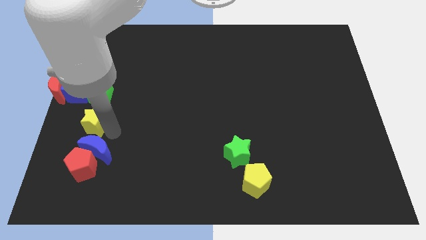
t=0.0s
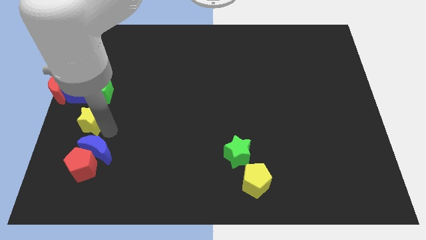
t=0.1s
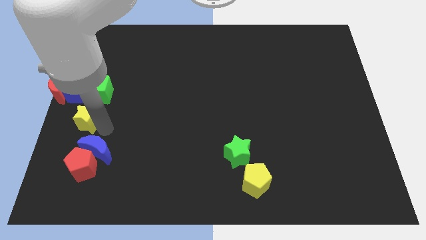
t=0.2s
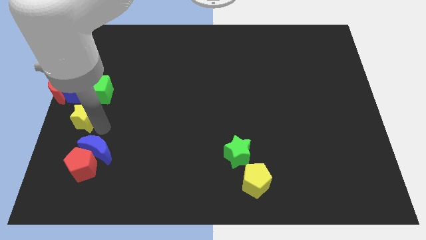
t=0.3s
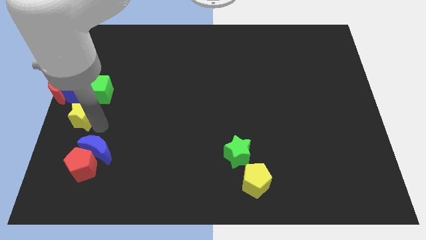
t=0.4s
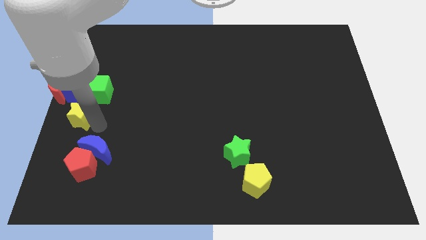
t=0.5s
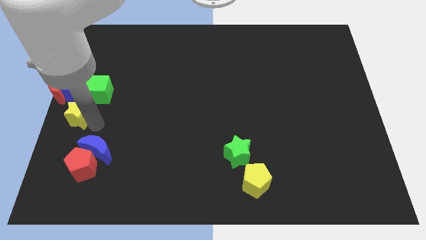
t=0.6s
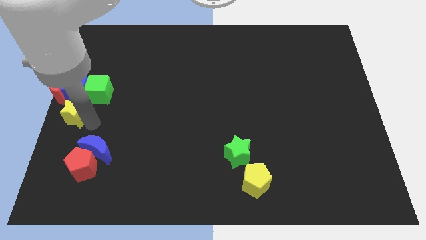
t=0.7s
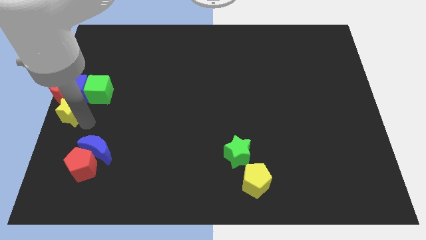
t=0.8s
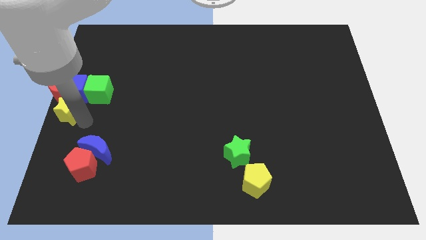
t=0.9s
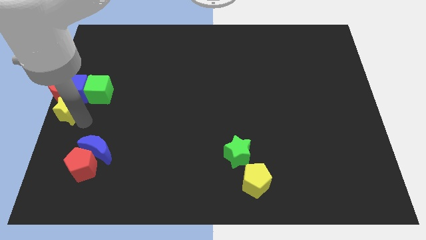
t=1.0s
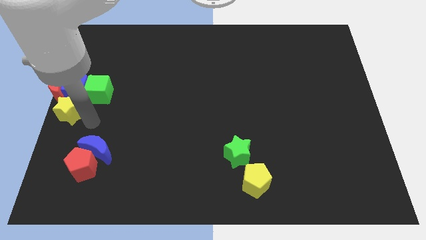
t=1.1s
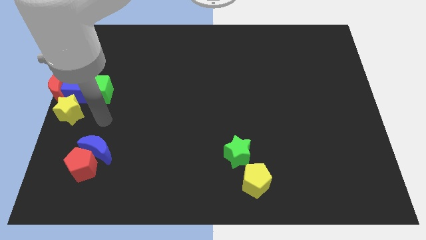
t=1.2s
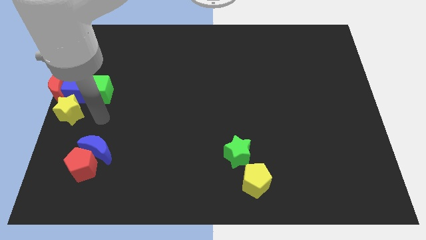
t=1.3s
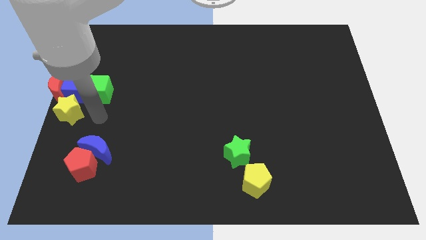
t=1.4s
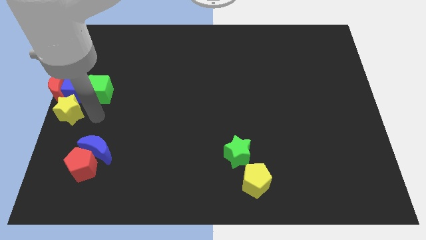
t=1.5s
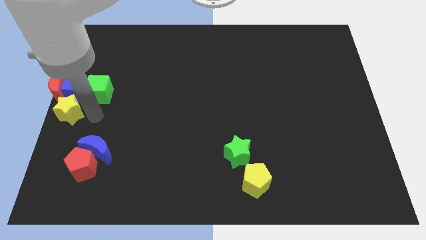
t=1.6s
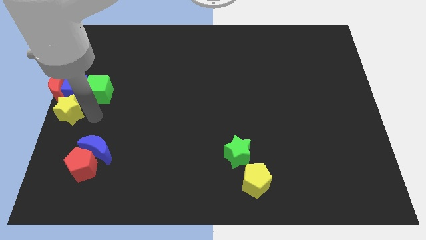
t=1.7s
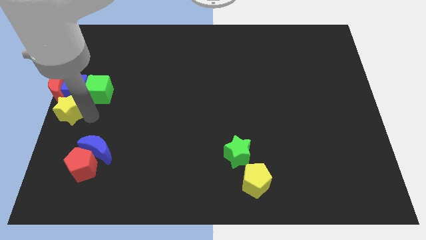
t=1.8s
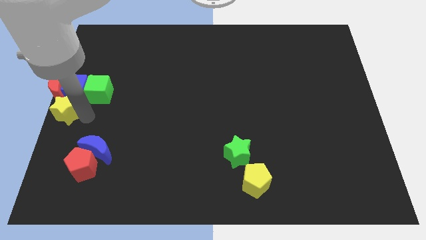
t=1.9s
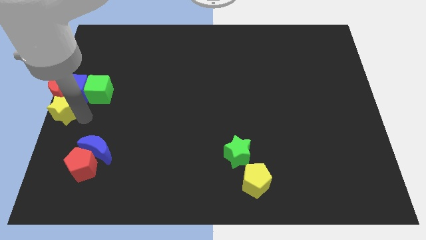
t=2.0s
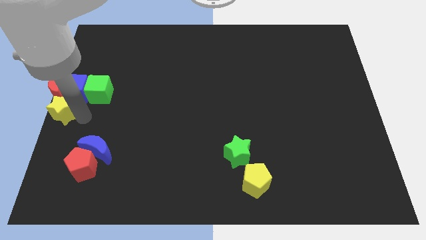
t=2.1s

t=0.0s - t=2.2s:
place yellow star below red crescent

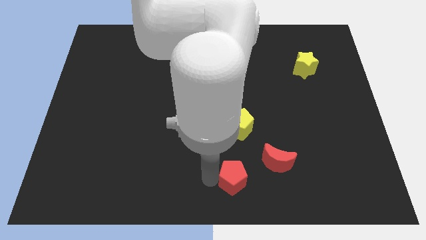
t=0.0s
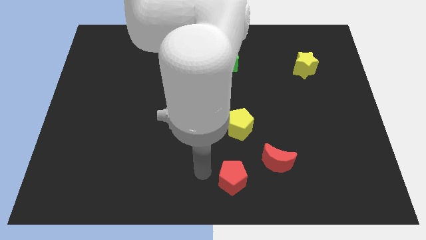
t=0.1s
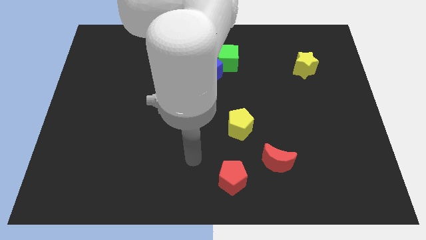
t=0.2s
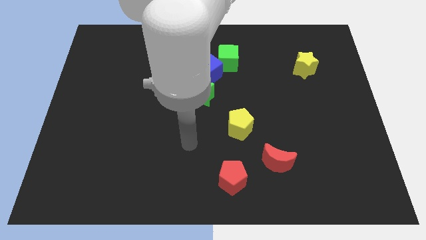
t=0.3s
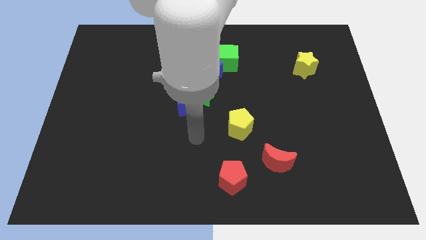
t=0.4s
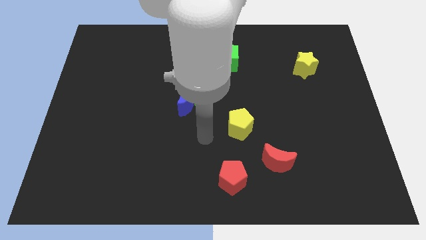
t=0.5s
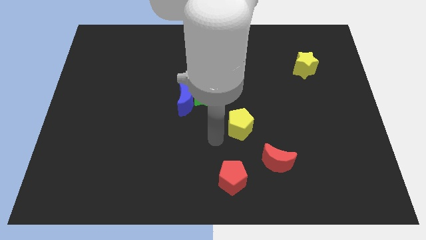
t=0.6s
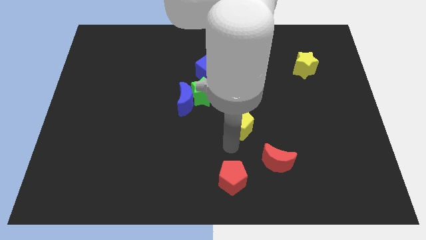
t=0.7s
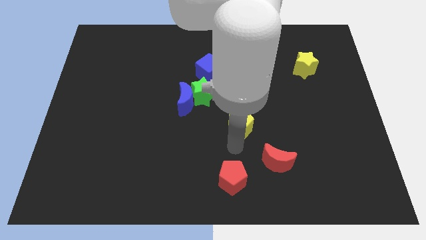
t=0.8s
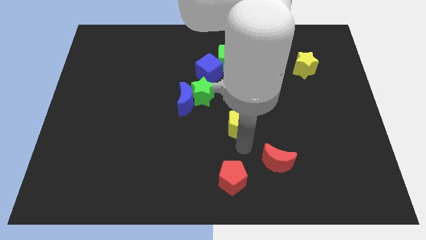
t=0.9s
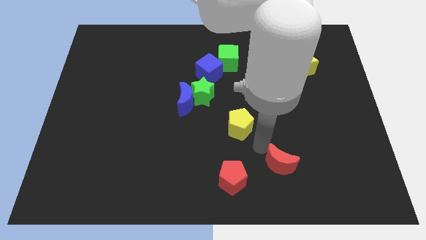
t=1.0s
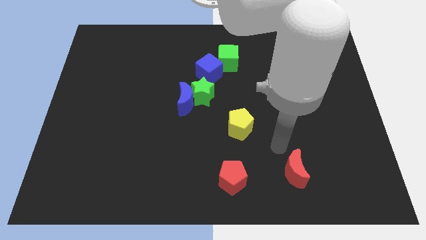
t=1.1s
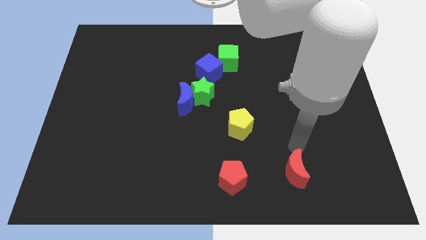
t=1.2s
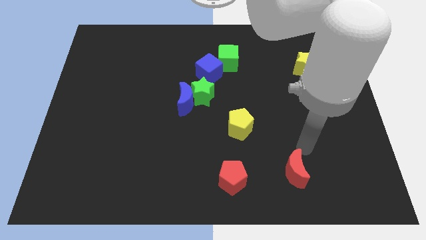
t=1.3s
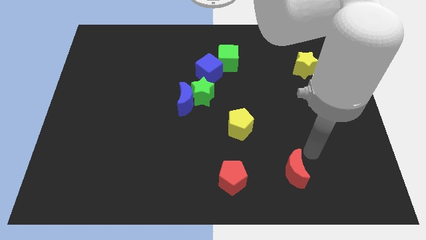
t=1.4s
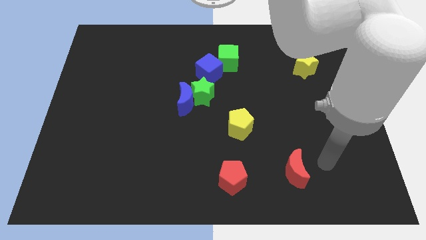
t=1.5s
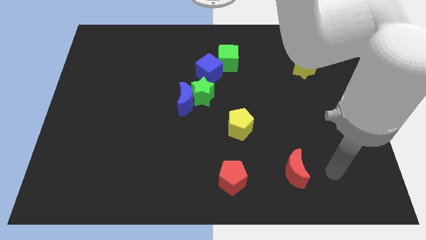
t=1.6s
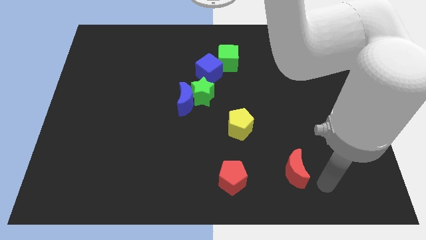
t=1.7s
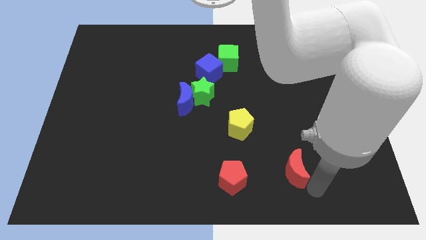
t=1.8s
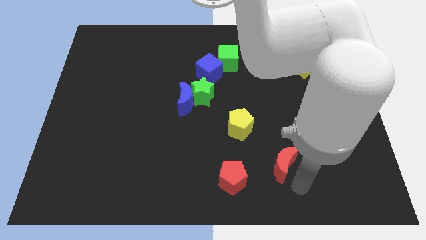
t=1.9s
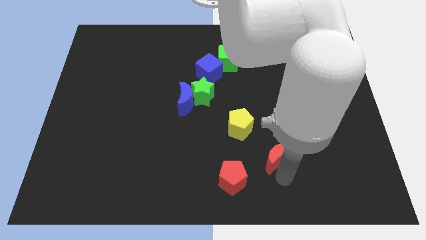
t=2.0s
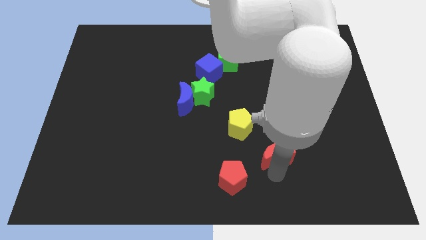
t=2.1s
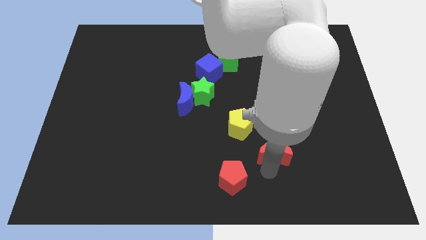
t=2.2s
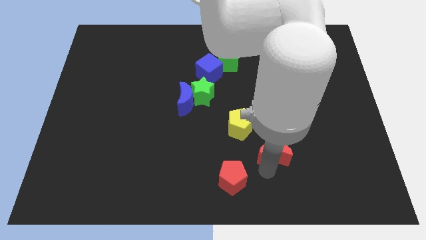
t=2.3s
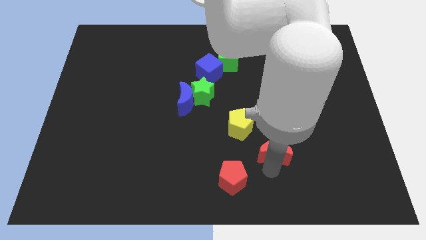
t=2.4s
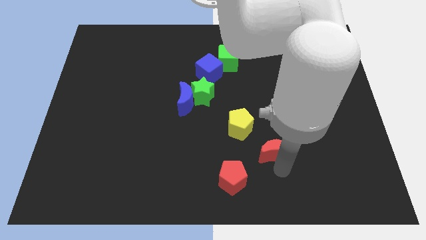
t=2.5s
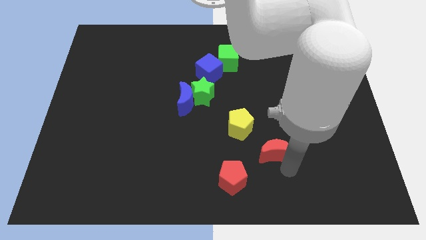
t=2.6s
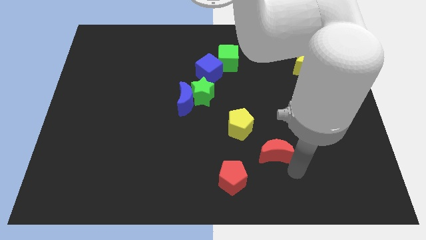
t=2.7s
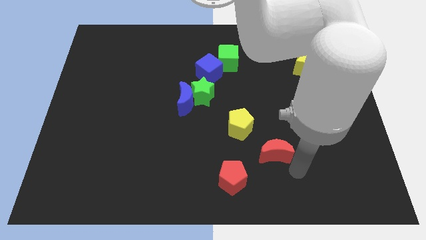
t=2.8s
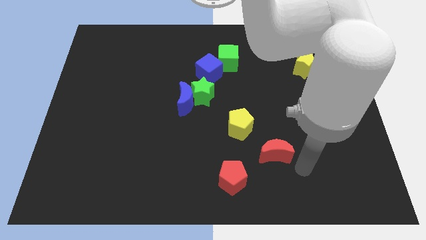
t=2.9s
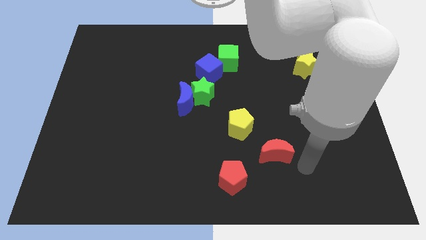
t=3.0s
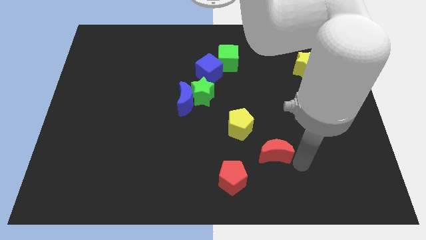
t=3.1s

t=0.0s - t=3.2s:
move the red crescent to the top right of the red pentagon

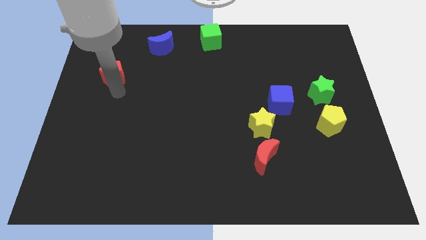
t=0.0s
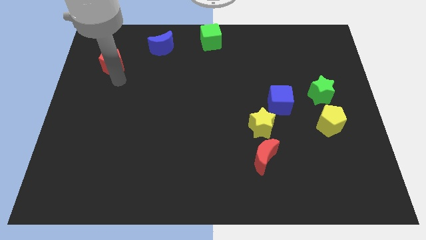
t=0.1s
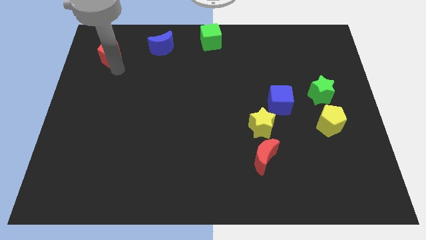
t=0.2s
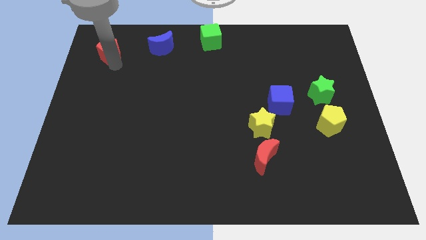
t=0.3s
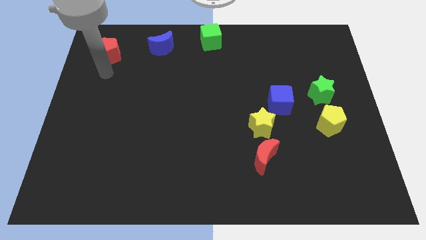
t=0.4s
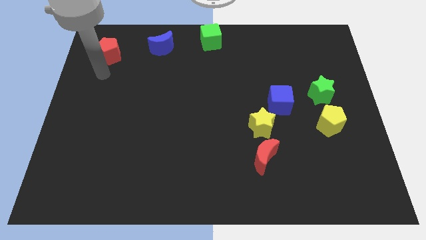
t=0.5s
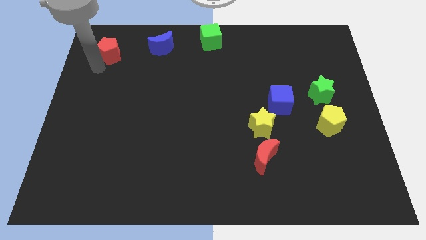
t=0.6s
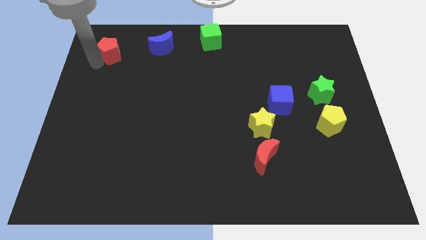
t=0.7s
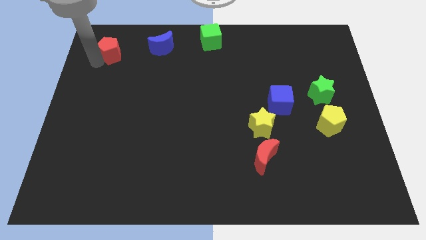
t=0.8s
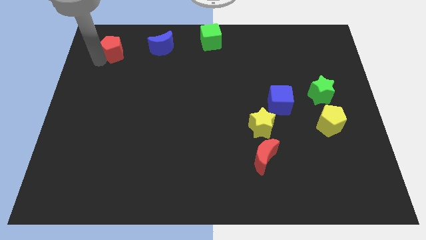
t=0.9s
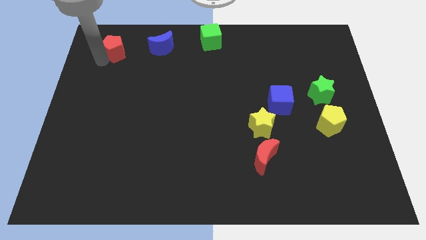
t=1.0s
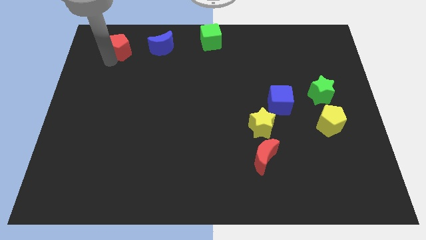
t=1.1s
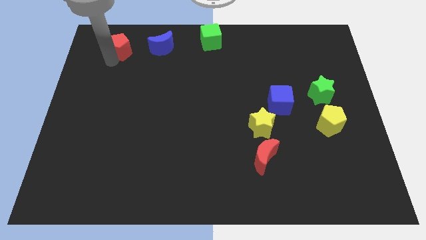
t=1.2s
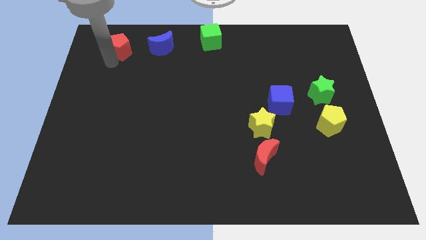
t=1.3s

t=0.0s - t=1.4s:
move the red pentagon to the left of the blue crescent

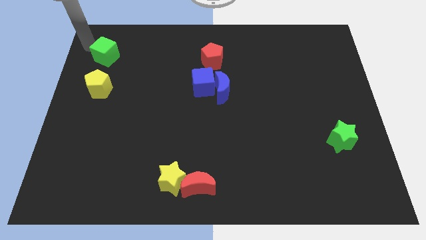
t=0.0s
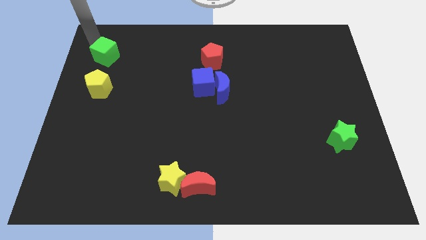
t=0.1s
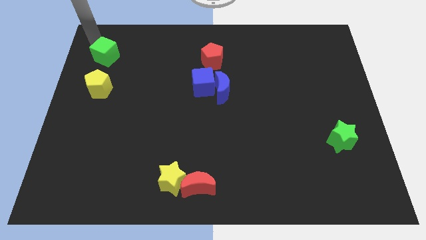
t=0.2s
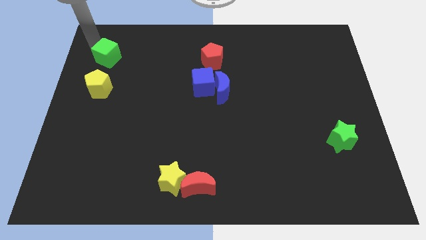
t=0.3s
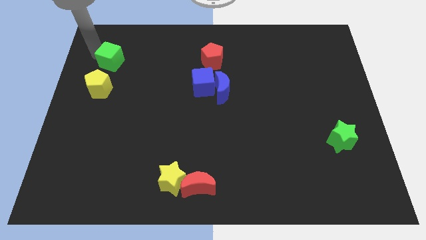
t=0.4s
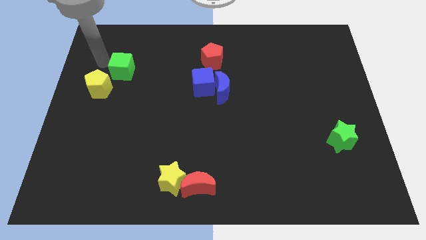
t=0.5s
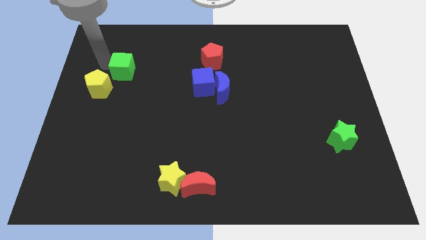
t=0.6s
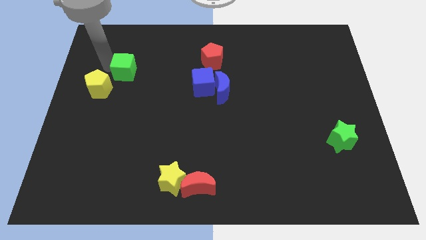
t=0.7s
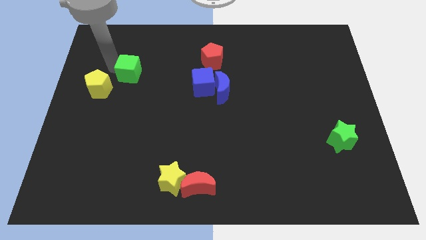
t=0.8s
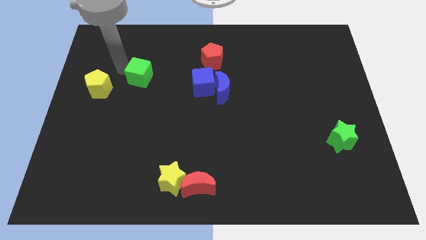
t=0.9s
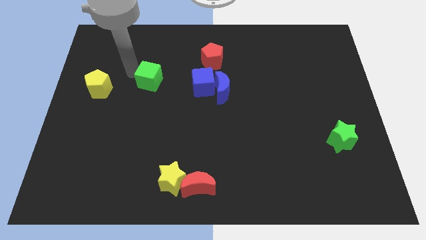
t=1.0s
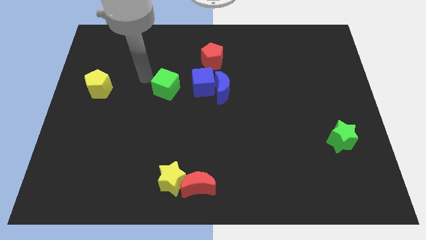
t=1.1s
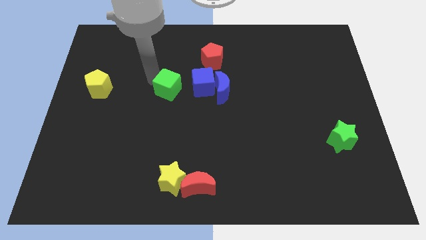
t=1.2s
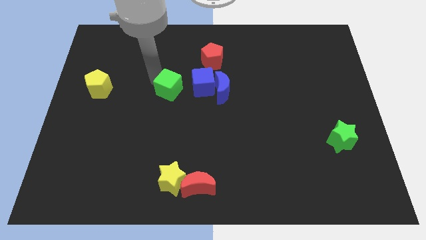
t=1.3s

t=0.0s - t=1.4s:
slide the green cube towards the left sude of the blue cube

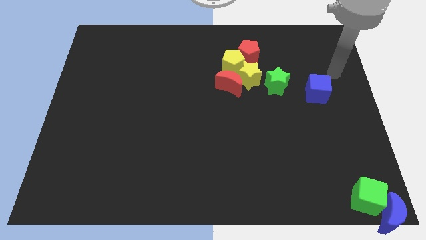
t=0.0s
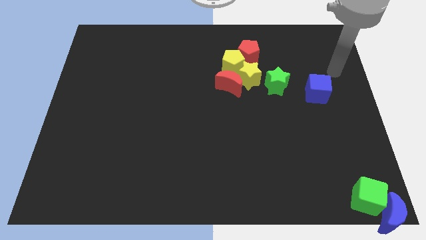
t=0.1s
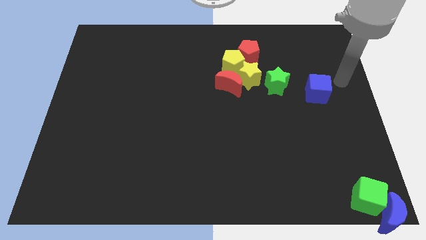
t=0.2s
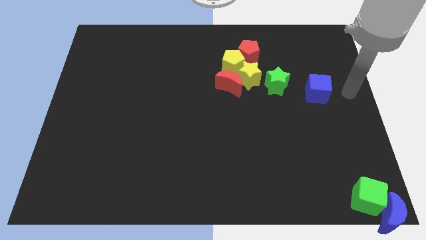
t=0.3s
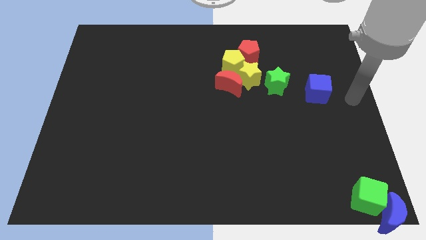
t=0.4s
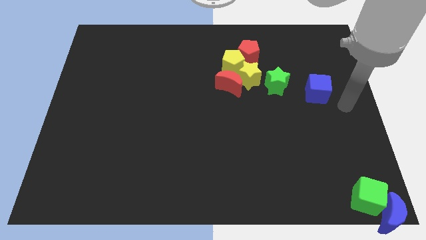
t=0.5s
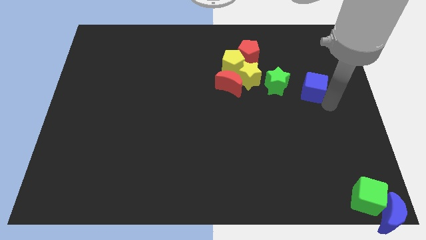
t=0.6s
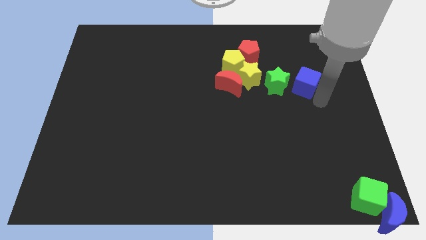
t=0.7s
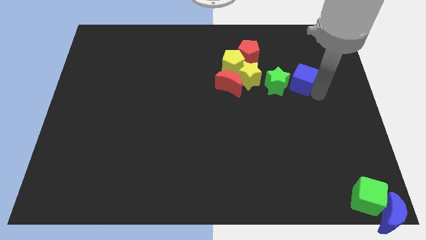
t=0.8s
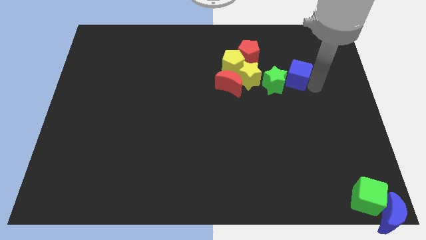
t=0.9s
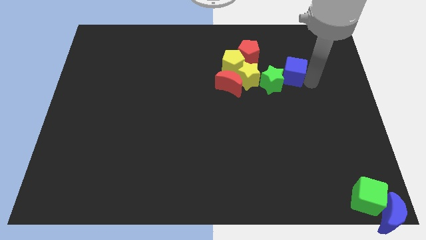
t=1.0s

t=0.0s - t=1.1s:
make the blue cube touch the top right of the green star
